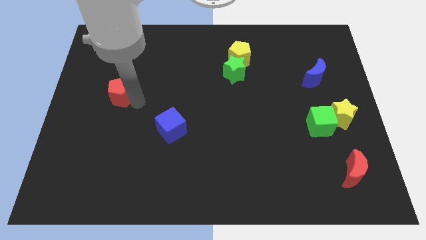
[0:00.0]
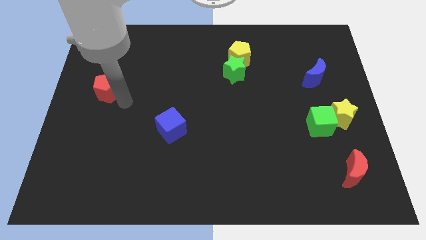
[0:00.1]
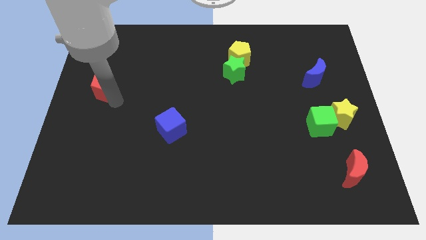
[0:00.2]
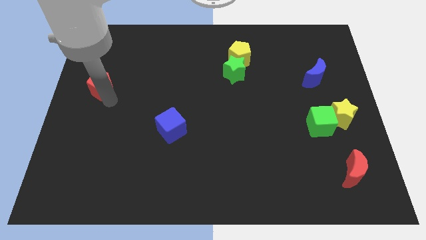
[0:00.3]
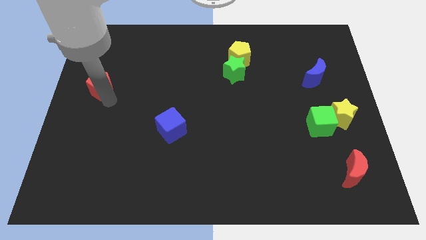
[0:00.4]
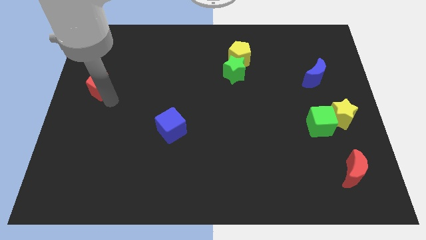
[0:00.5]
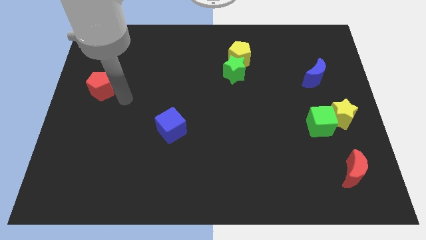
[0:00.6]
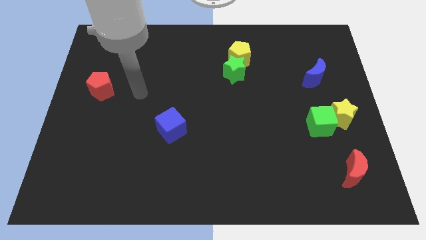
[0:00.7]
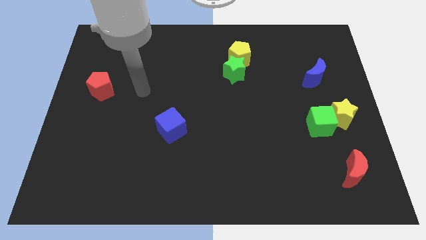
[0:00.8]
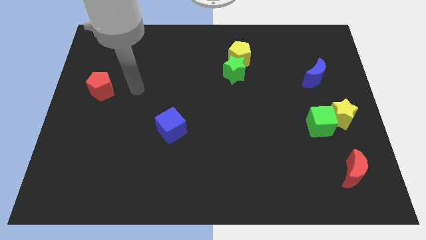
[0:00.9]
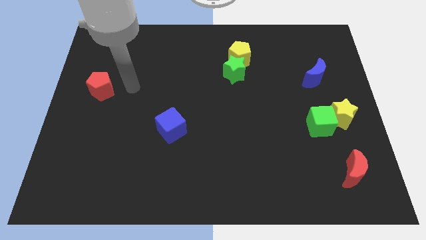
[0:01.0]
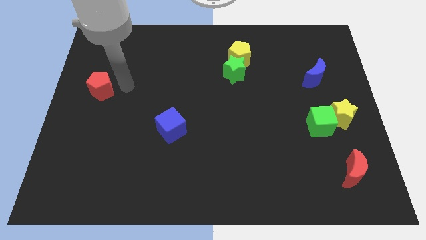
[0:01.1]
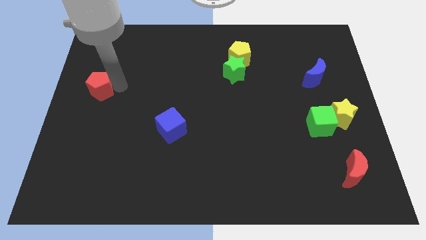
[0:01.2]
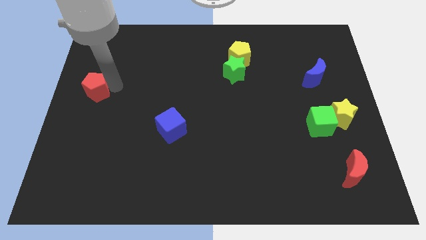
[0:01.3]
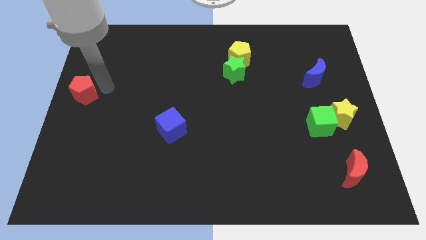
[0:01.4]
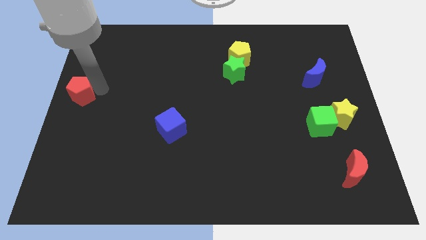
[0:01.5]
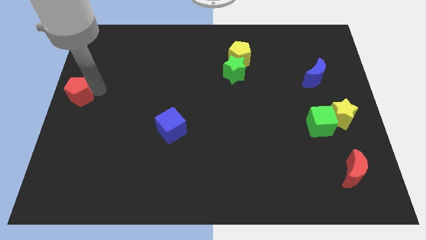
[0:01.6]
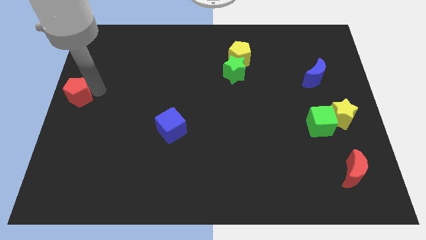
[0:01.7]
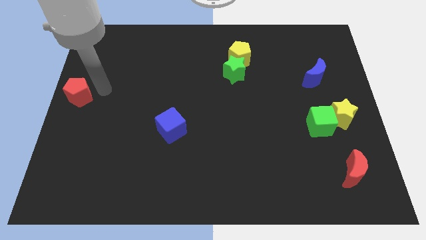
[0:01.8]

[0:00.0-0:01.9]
place the red pentagon diagonal to the blue cube

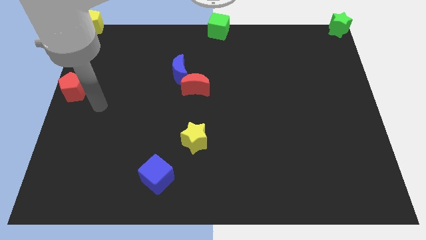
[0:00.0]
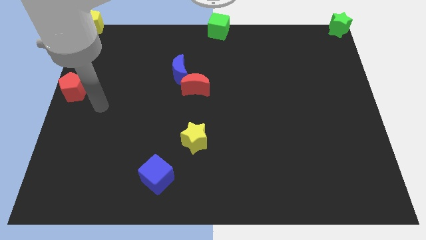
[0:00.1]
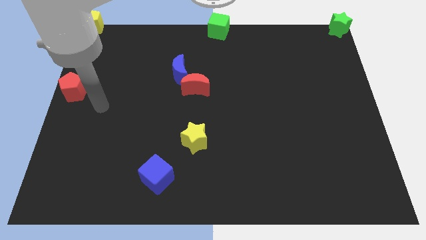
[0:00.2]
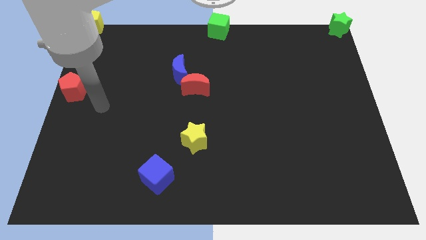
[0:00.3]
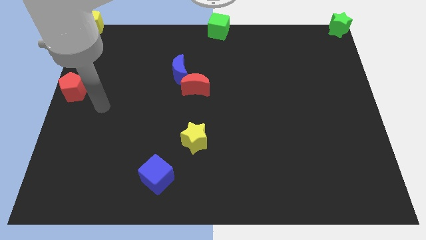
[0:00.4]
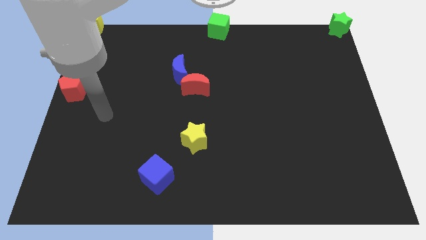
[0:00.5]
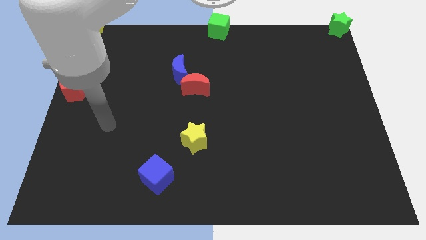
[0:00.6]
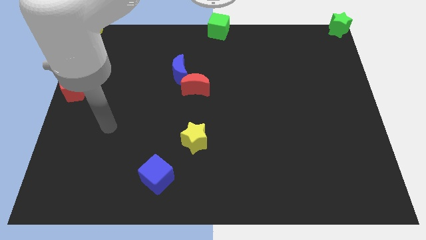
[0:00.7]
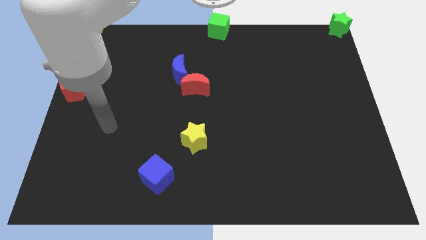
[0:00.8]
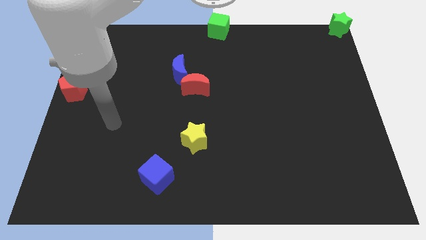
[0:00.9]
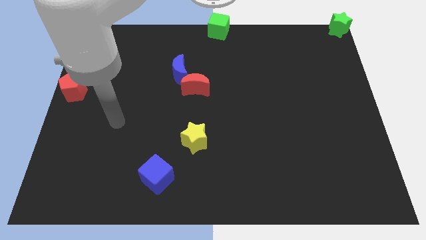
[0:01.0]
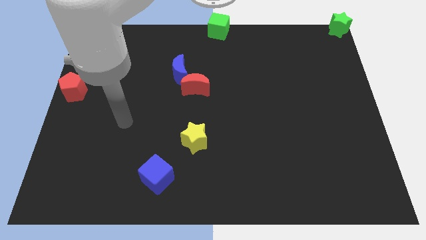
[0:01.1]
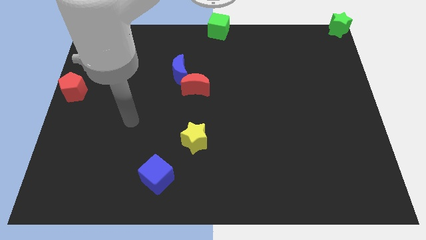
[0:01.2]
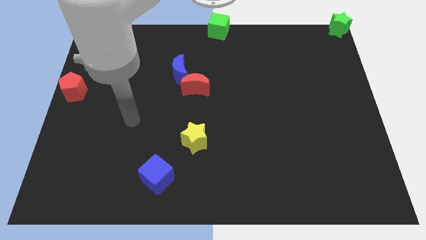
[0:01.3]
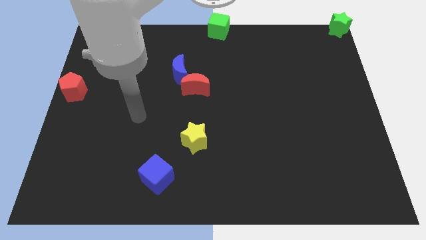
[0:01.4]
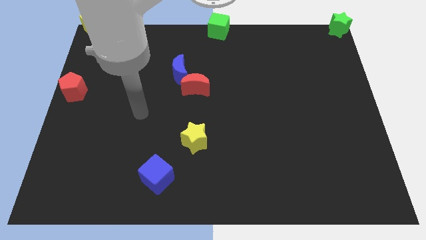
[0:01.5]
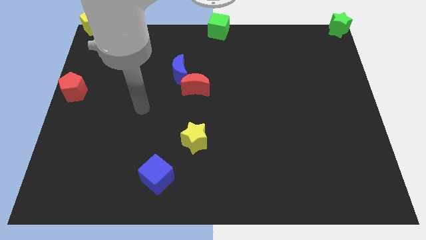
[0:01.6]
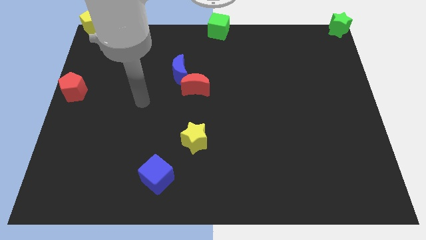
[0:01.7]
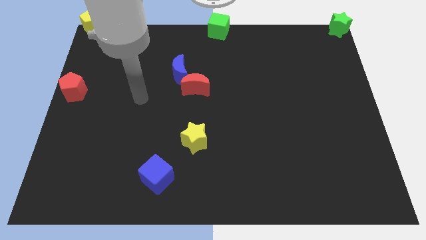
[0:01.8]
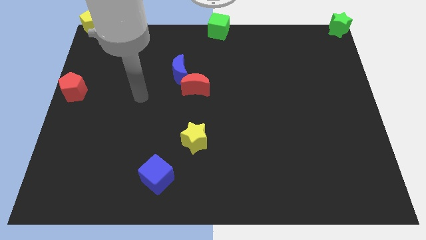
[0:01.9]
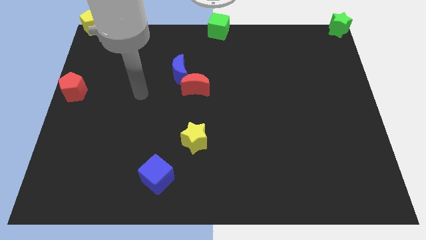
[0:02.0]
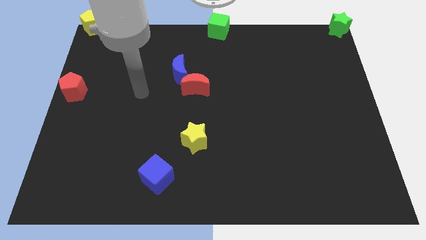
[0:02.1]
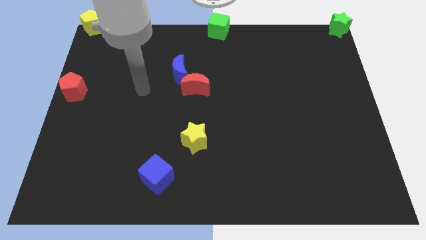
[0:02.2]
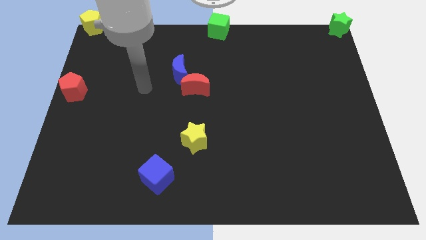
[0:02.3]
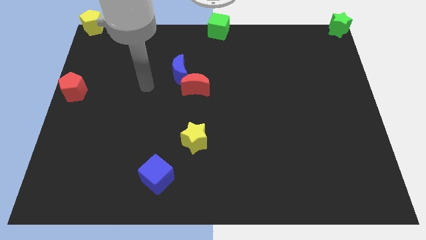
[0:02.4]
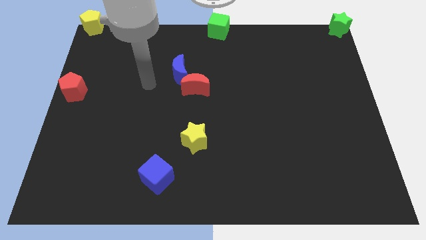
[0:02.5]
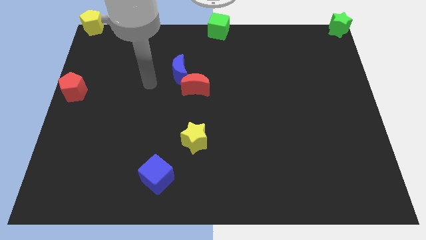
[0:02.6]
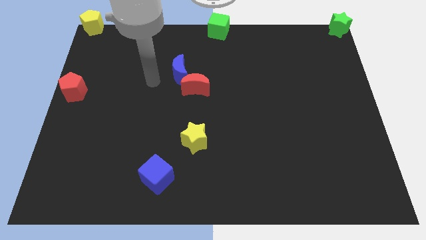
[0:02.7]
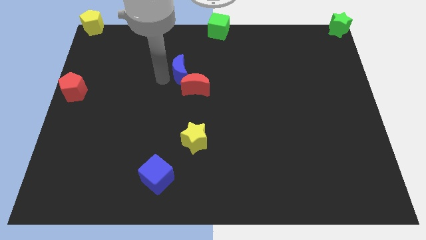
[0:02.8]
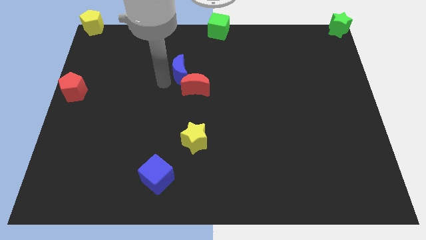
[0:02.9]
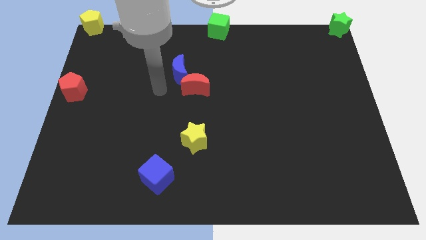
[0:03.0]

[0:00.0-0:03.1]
move your arm towards the left side of the blue crescent

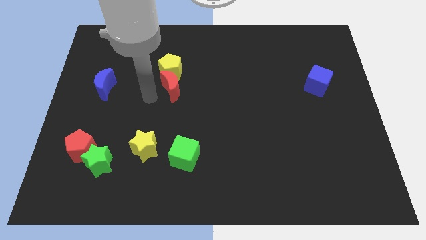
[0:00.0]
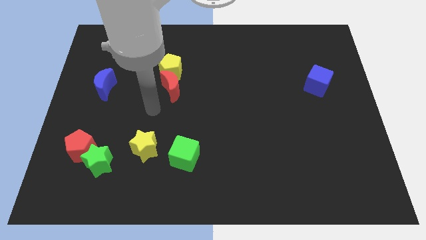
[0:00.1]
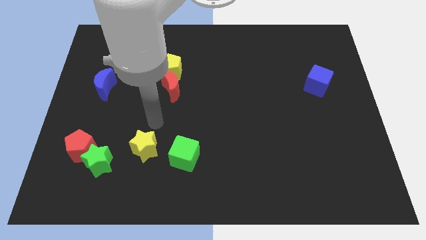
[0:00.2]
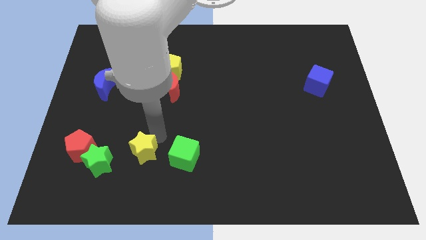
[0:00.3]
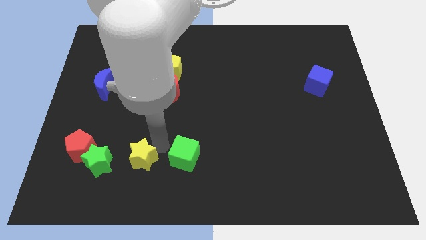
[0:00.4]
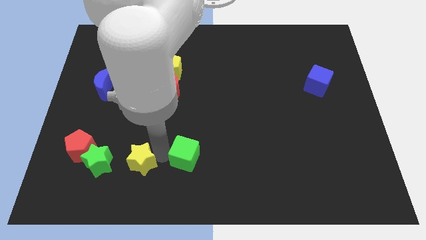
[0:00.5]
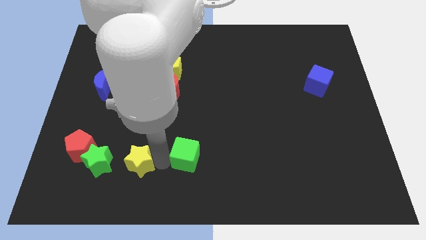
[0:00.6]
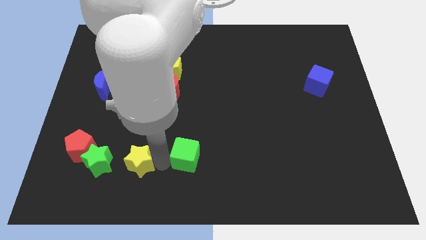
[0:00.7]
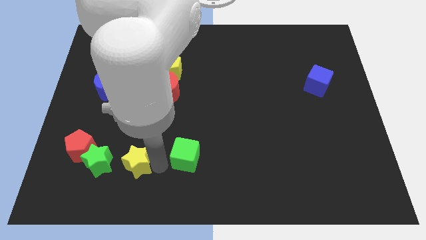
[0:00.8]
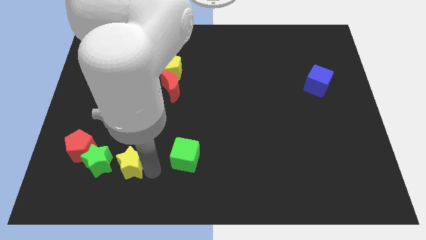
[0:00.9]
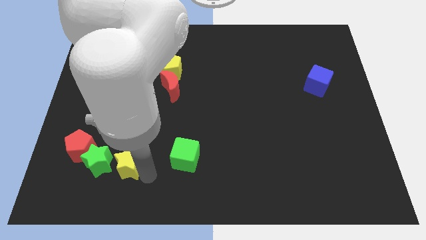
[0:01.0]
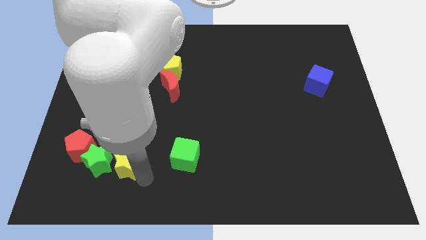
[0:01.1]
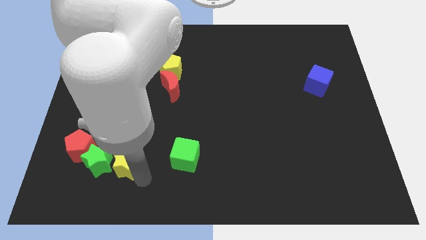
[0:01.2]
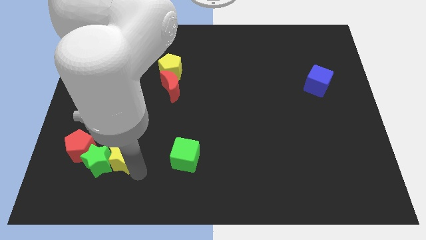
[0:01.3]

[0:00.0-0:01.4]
place the yellow star to the left of the green star

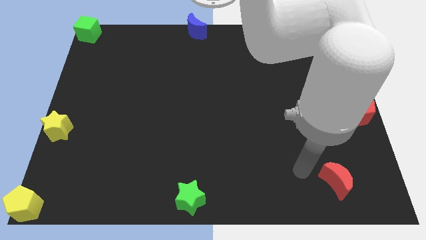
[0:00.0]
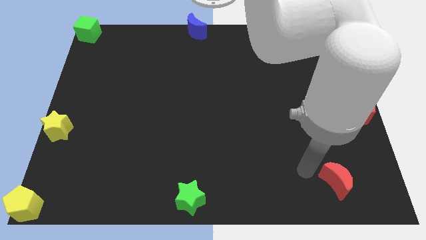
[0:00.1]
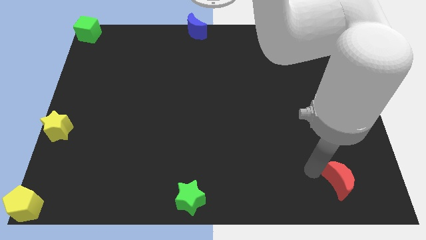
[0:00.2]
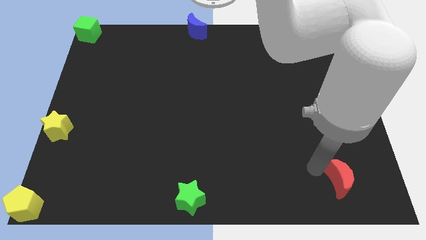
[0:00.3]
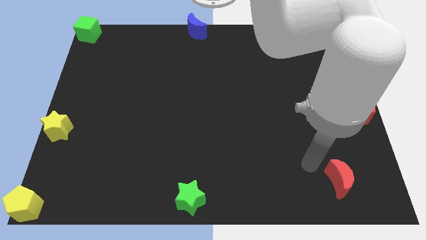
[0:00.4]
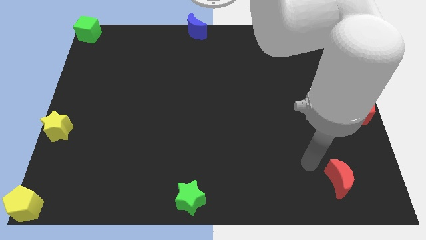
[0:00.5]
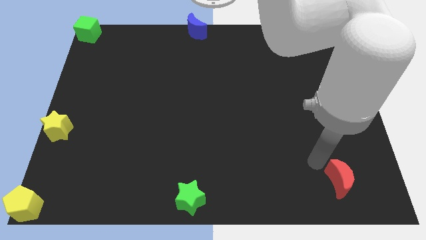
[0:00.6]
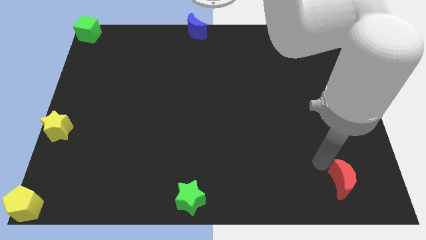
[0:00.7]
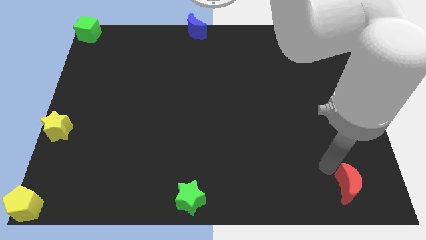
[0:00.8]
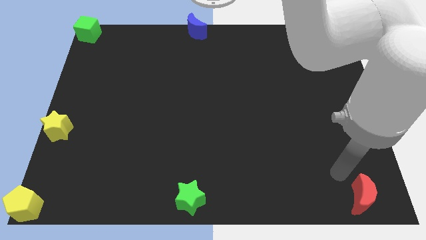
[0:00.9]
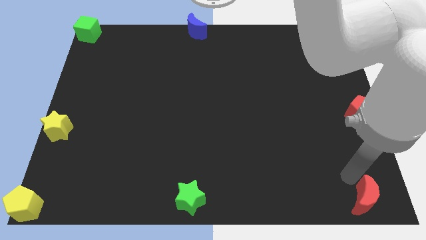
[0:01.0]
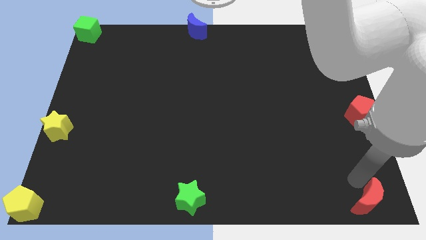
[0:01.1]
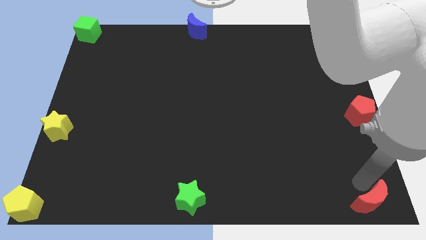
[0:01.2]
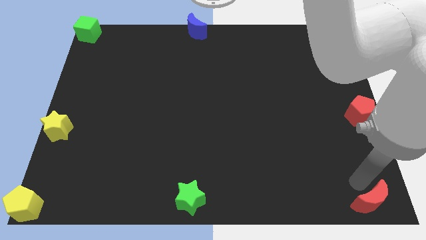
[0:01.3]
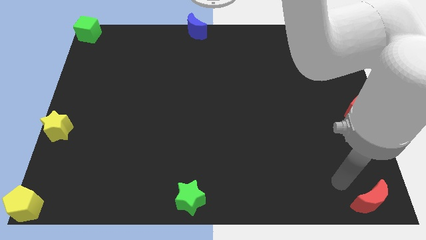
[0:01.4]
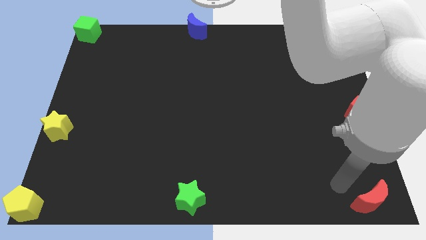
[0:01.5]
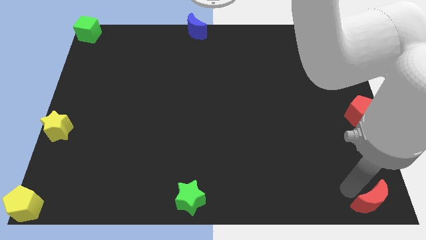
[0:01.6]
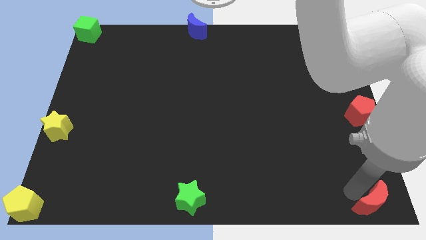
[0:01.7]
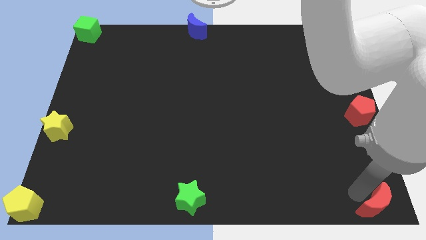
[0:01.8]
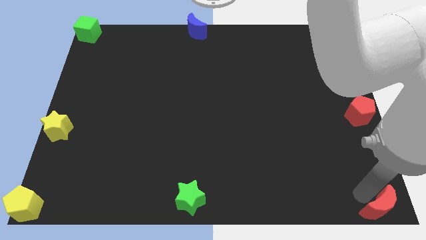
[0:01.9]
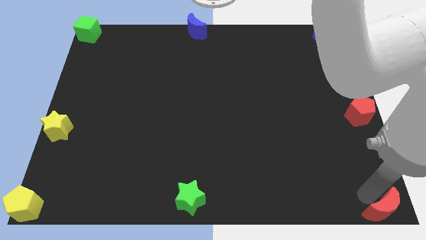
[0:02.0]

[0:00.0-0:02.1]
push the red moon to the bottom right corner

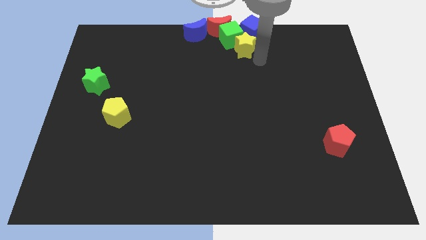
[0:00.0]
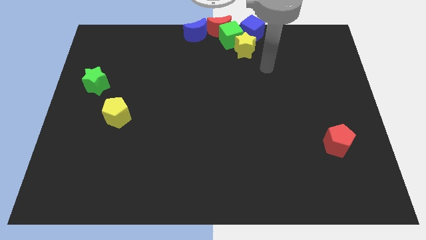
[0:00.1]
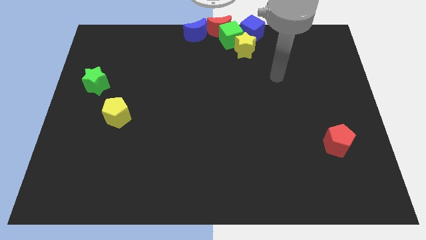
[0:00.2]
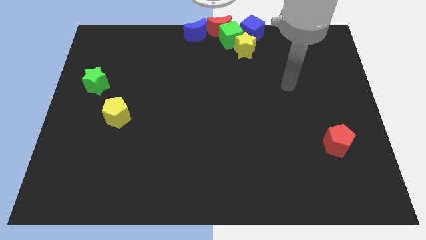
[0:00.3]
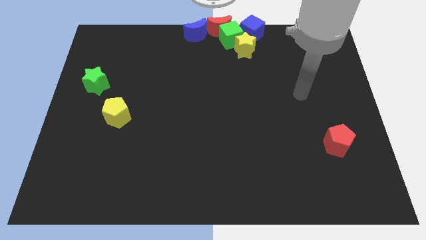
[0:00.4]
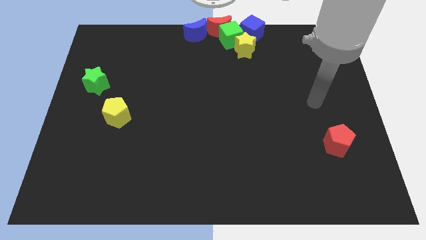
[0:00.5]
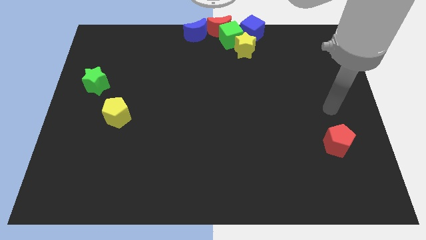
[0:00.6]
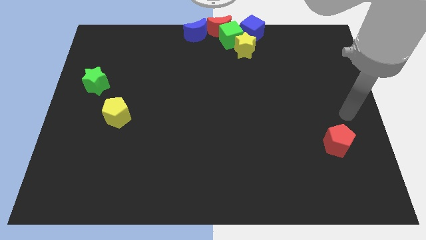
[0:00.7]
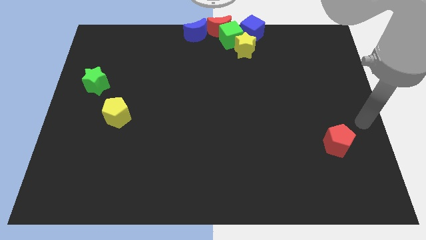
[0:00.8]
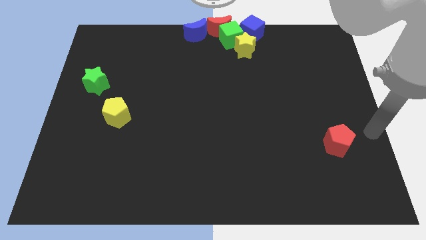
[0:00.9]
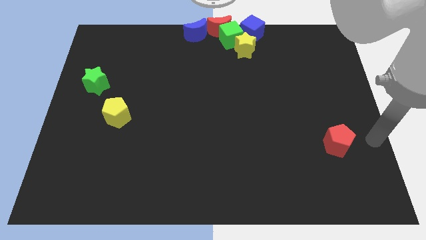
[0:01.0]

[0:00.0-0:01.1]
move the arm away from the yellow star
